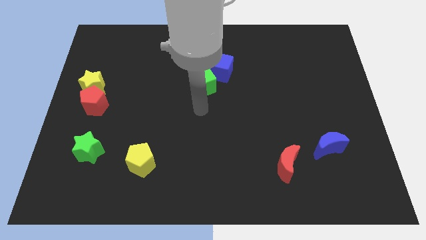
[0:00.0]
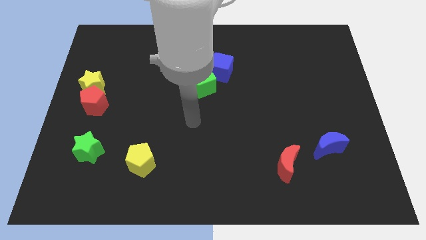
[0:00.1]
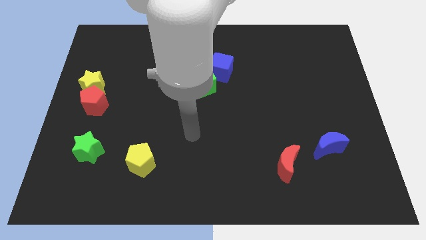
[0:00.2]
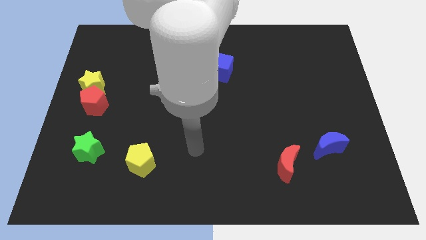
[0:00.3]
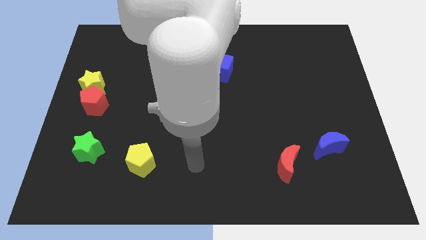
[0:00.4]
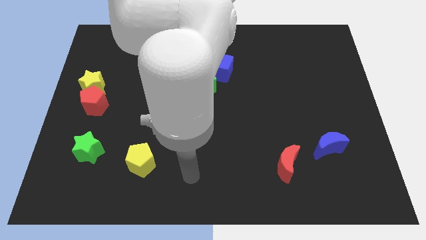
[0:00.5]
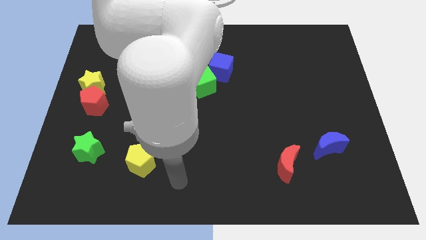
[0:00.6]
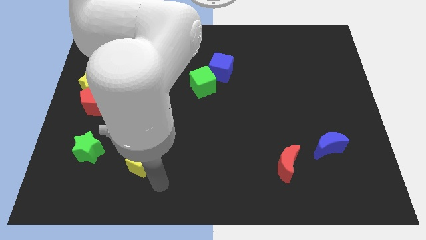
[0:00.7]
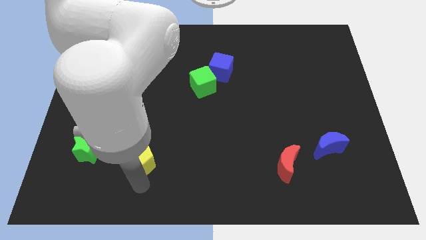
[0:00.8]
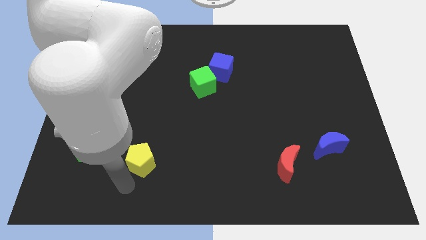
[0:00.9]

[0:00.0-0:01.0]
move your arm away from green cube

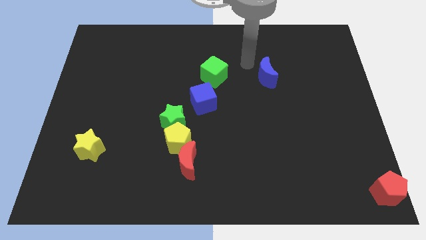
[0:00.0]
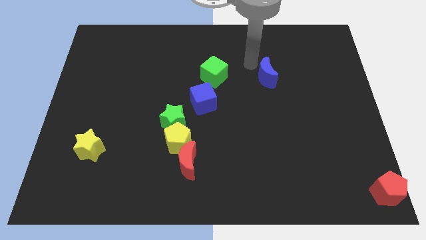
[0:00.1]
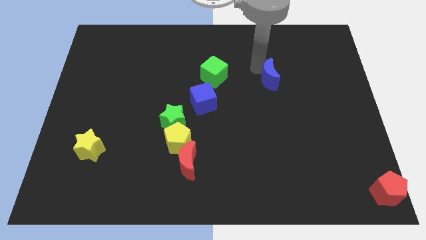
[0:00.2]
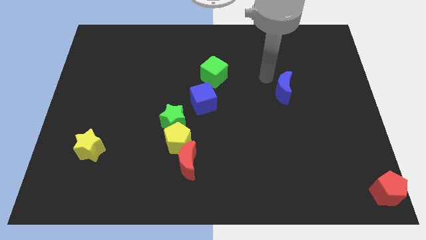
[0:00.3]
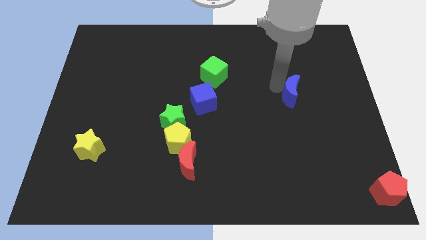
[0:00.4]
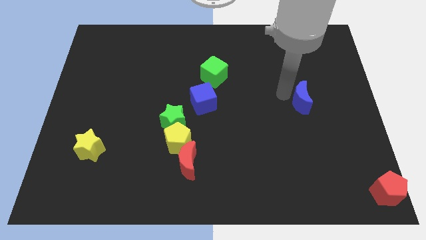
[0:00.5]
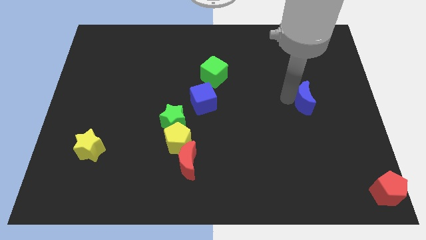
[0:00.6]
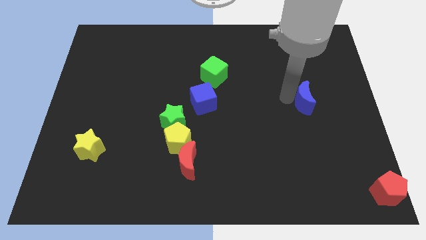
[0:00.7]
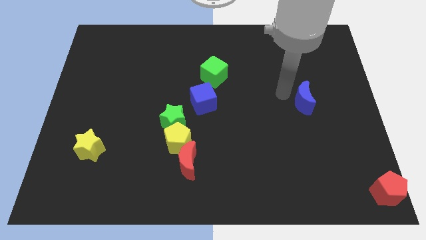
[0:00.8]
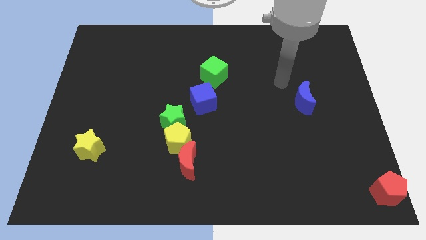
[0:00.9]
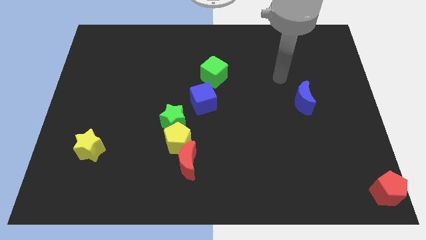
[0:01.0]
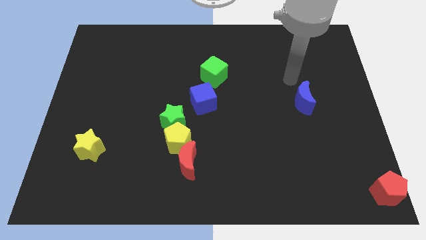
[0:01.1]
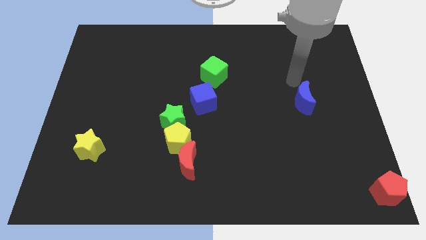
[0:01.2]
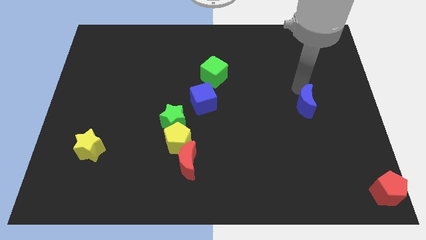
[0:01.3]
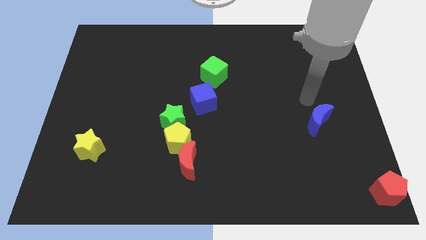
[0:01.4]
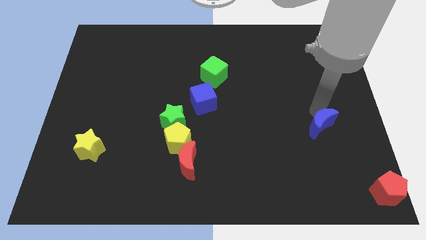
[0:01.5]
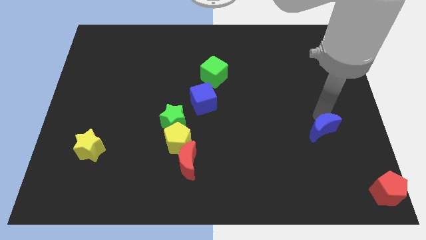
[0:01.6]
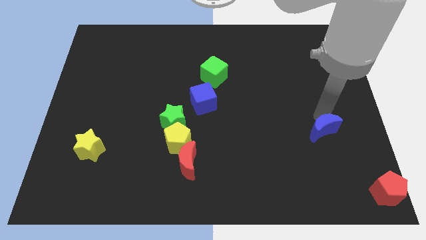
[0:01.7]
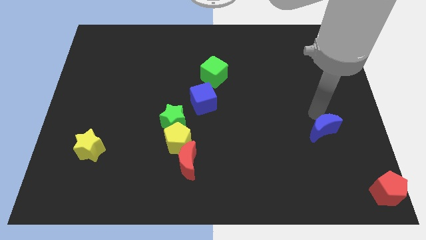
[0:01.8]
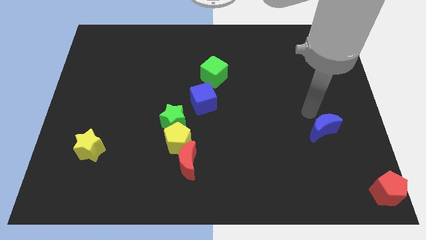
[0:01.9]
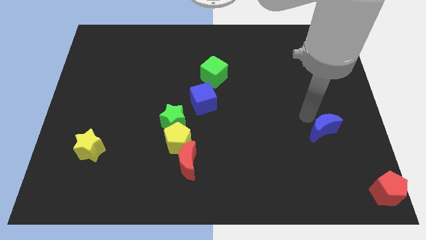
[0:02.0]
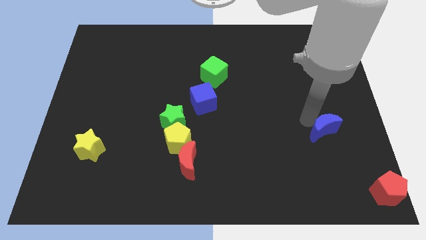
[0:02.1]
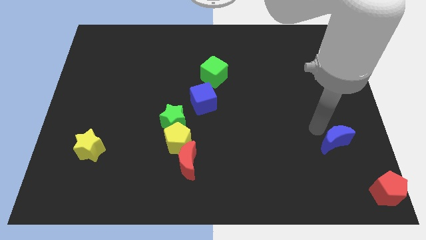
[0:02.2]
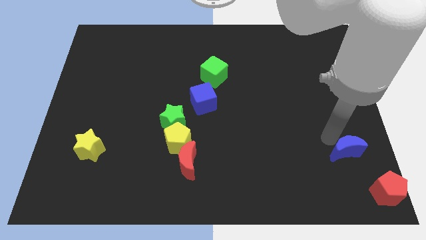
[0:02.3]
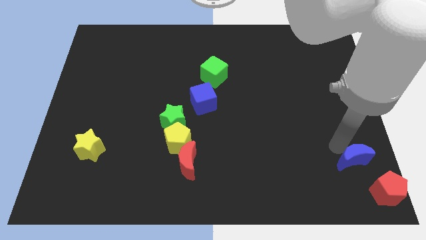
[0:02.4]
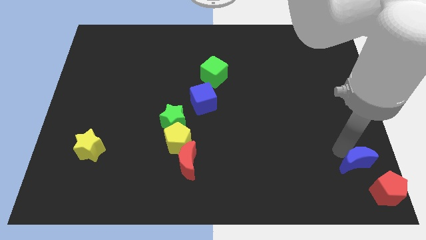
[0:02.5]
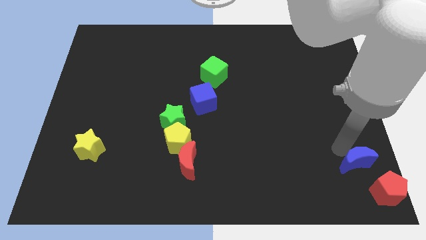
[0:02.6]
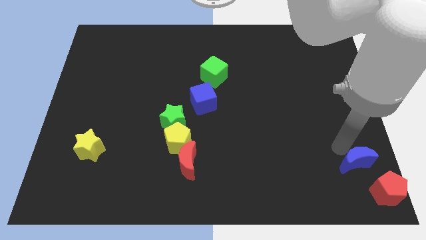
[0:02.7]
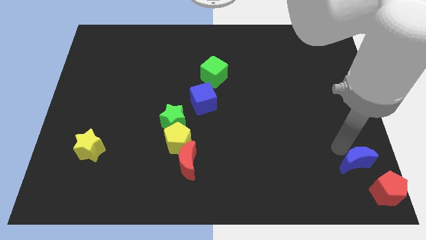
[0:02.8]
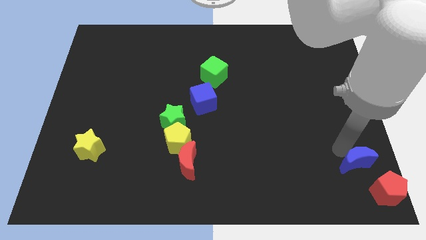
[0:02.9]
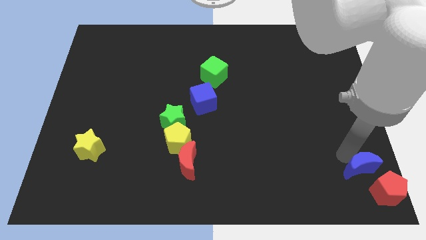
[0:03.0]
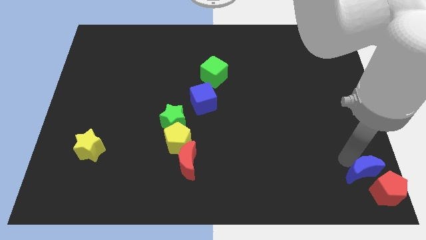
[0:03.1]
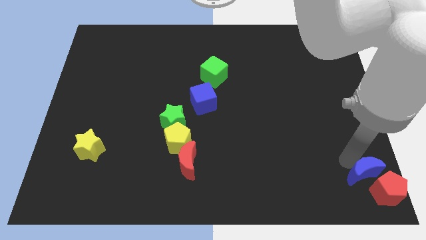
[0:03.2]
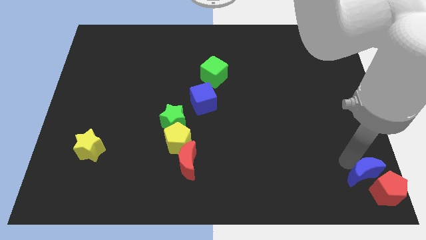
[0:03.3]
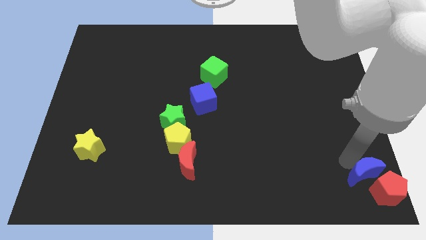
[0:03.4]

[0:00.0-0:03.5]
place blue cube to the top of the red pentagon

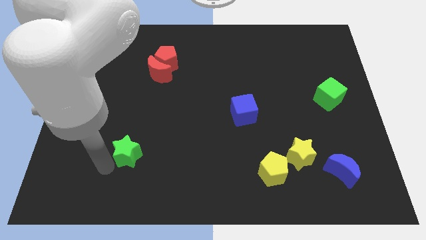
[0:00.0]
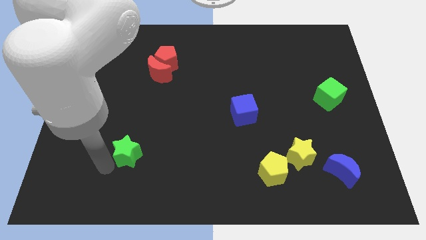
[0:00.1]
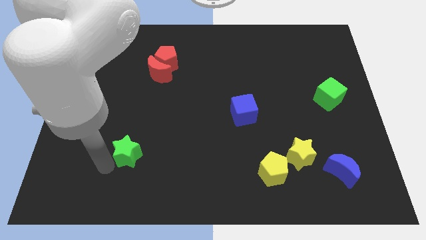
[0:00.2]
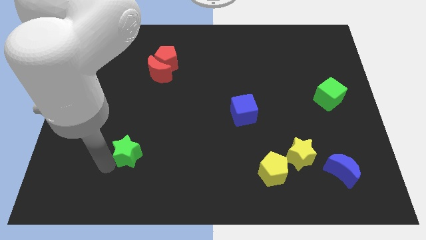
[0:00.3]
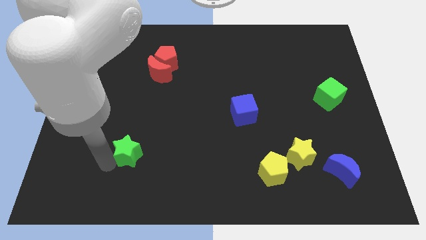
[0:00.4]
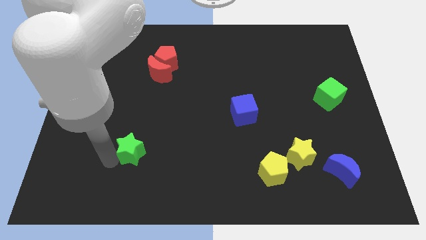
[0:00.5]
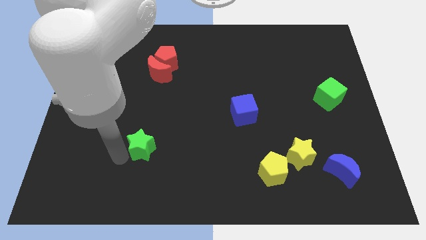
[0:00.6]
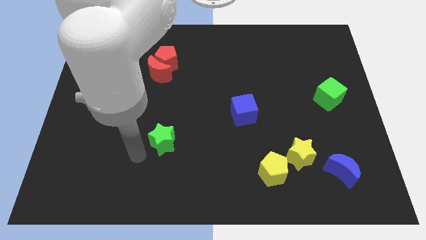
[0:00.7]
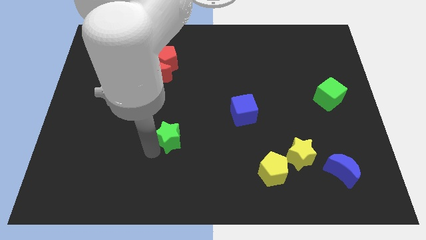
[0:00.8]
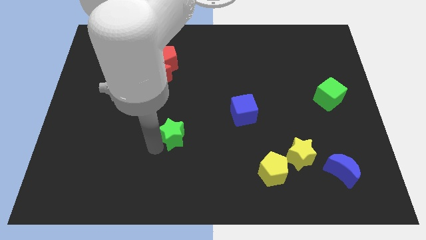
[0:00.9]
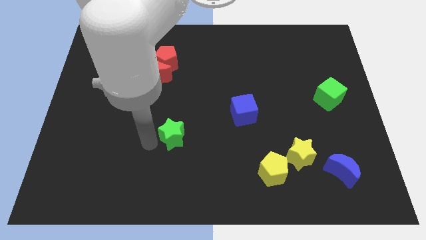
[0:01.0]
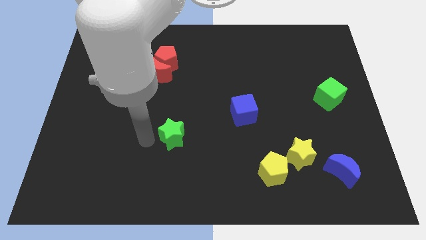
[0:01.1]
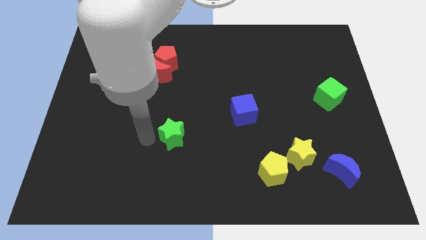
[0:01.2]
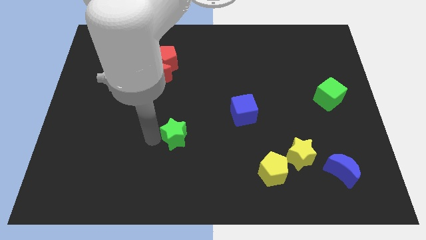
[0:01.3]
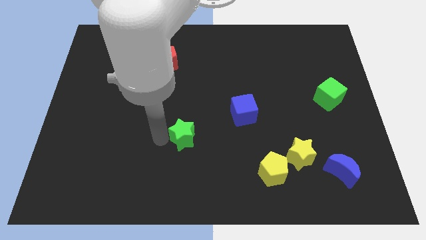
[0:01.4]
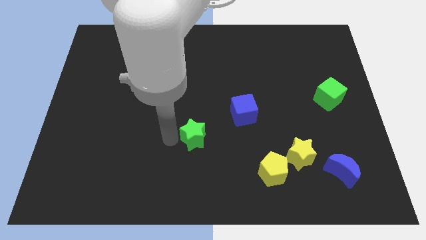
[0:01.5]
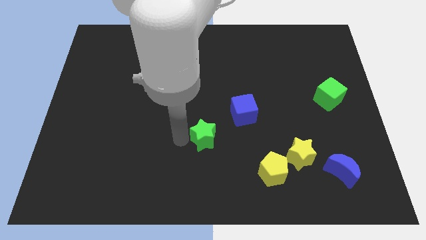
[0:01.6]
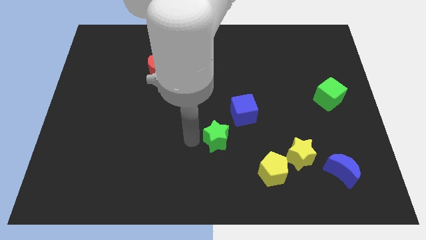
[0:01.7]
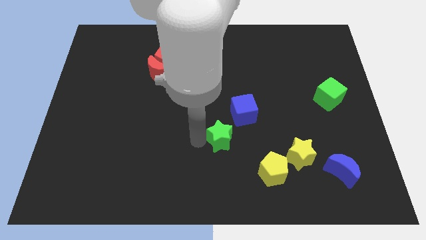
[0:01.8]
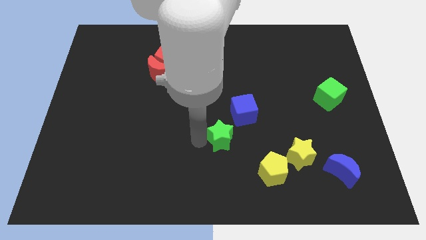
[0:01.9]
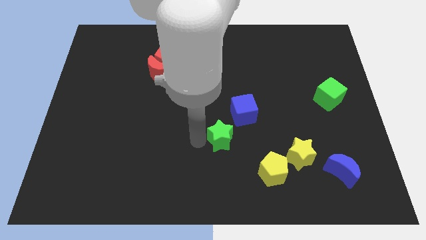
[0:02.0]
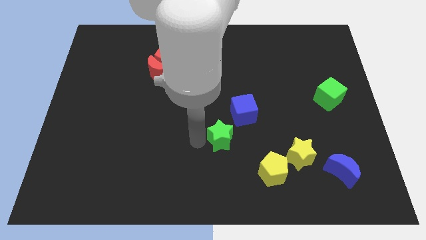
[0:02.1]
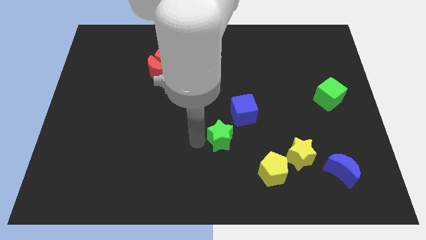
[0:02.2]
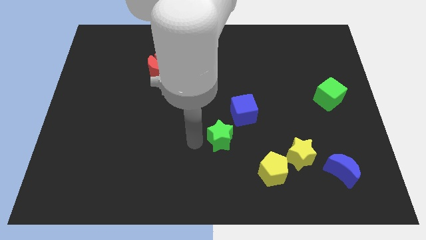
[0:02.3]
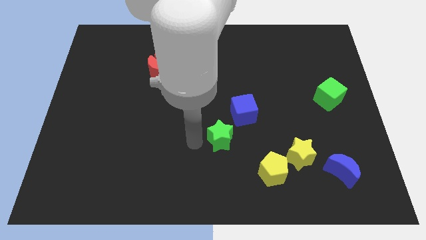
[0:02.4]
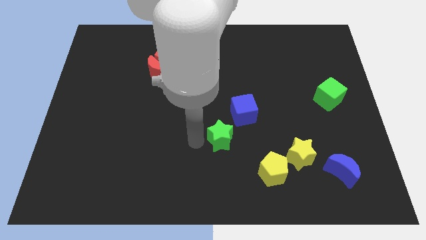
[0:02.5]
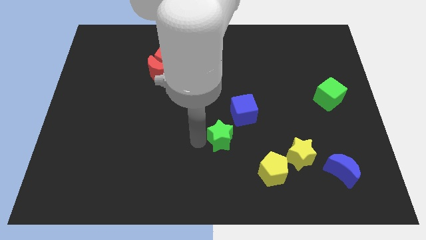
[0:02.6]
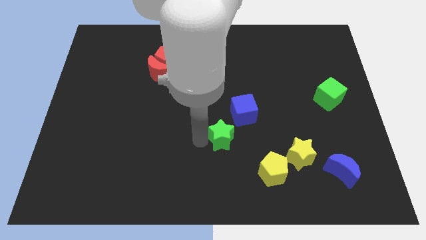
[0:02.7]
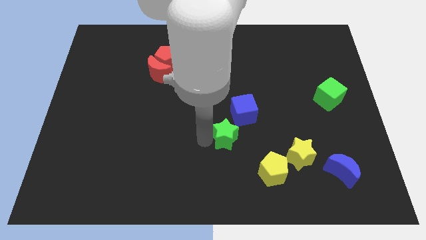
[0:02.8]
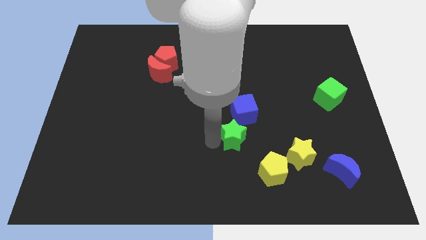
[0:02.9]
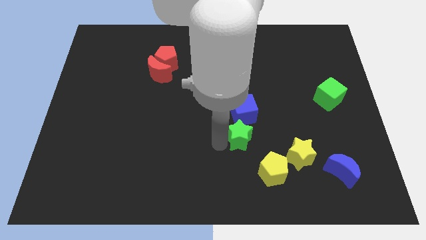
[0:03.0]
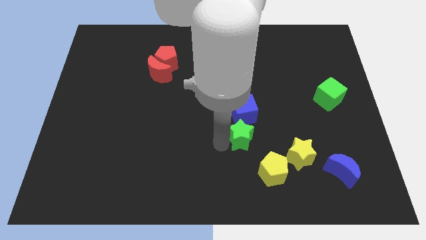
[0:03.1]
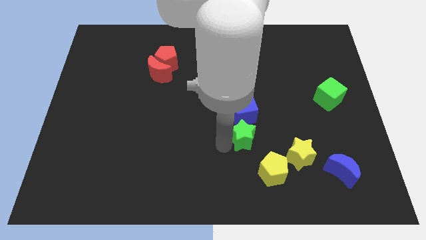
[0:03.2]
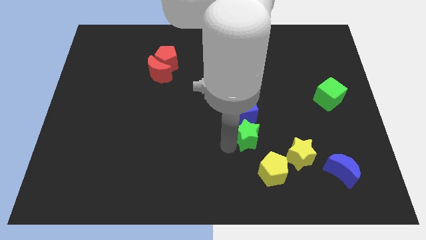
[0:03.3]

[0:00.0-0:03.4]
place the green star under the blue cube

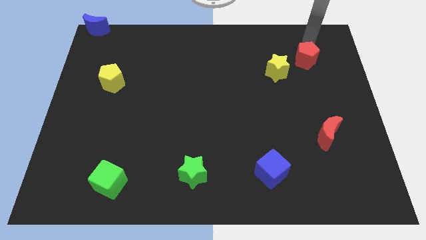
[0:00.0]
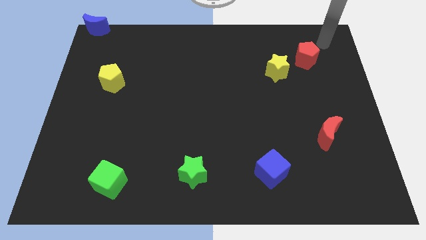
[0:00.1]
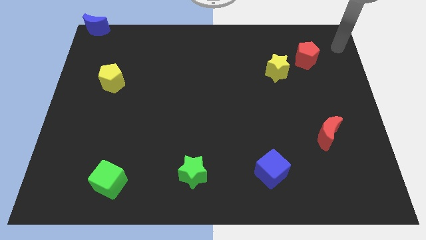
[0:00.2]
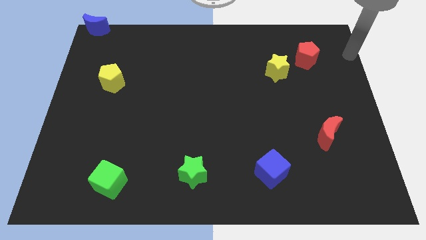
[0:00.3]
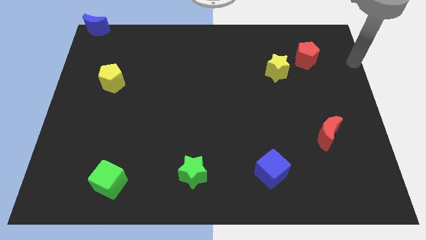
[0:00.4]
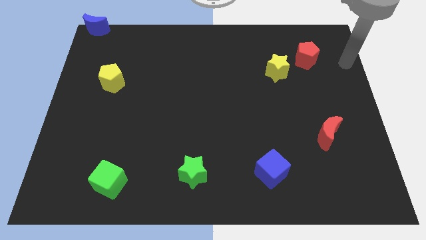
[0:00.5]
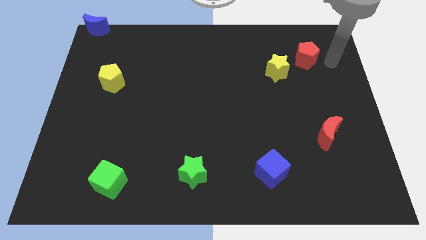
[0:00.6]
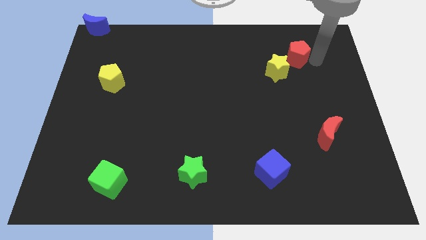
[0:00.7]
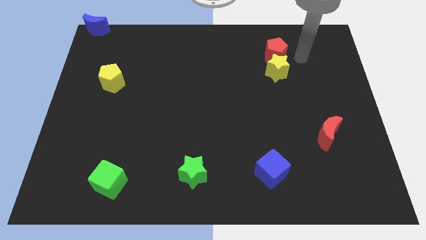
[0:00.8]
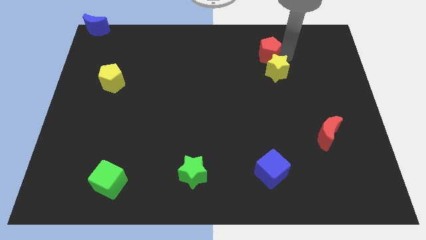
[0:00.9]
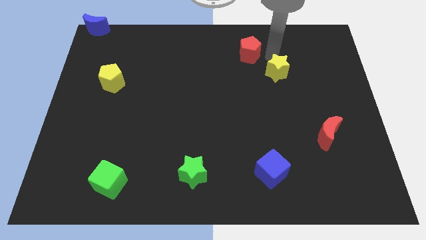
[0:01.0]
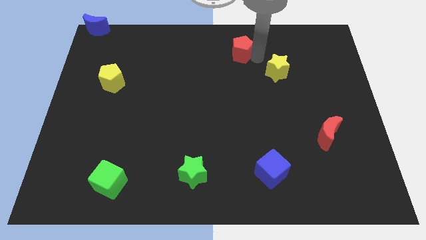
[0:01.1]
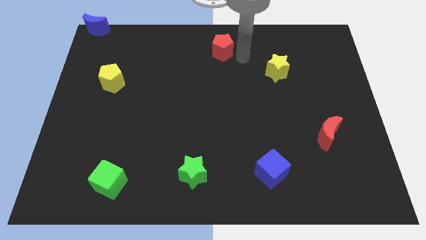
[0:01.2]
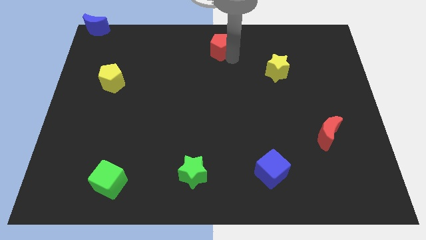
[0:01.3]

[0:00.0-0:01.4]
move the red pentagon to the top center
